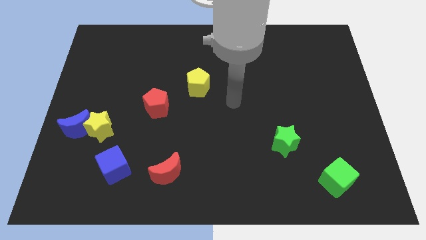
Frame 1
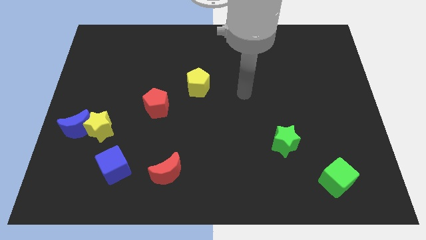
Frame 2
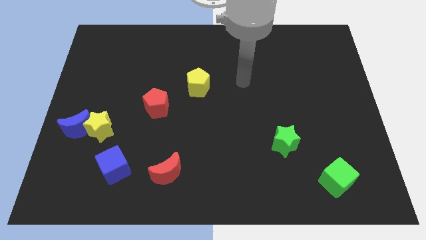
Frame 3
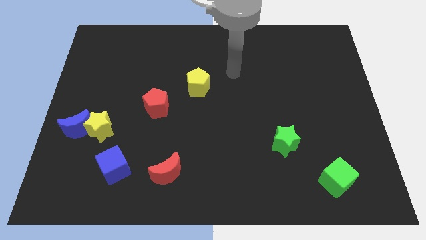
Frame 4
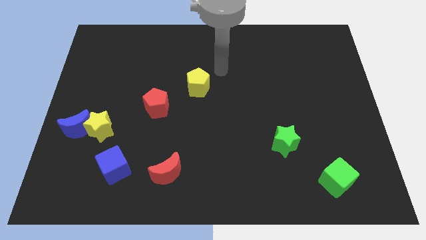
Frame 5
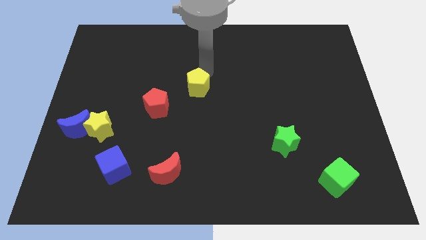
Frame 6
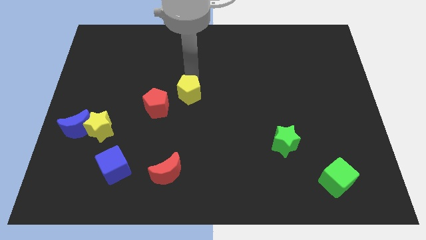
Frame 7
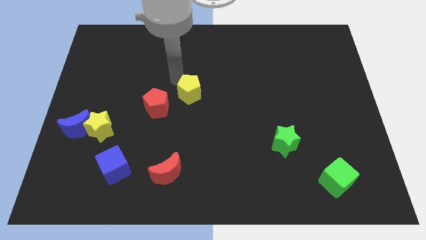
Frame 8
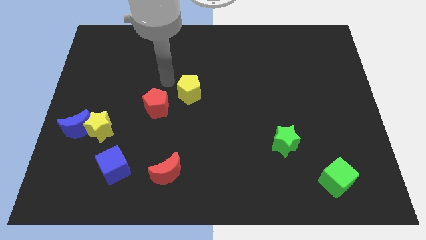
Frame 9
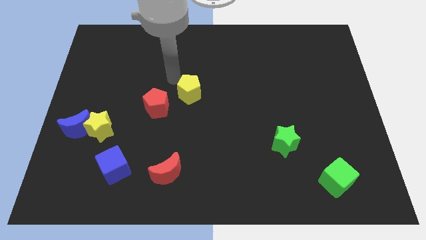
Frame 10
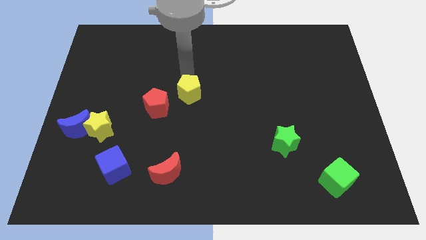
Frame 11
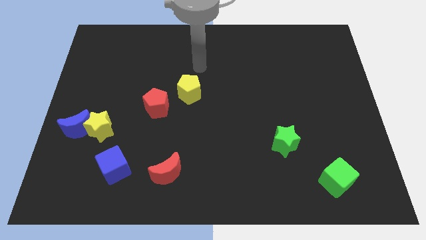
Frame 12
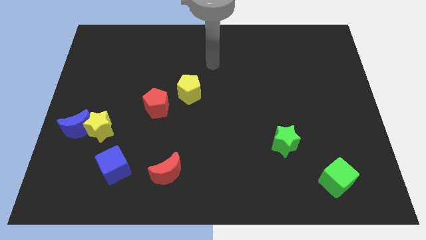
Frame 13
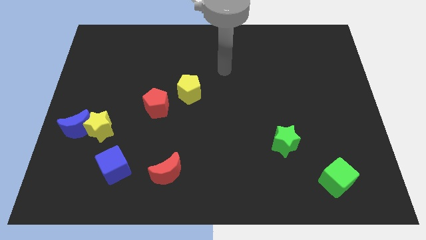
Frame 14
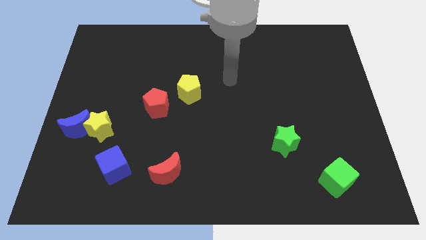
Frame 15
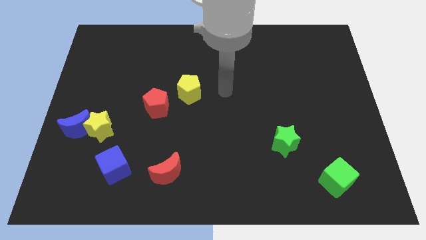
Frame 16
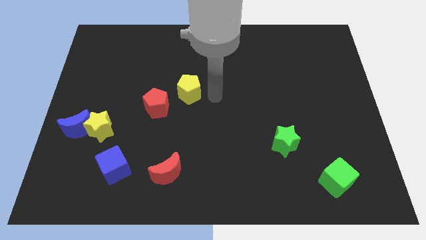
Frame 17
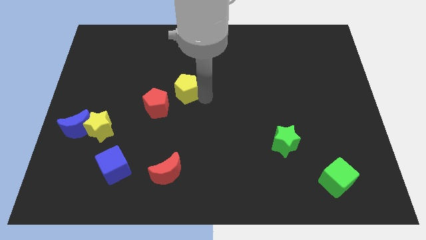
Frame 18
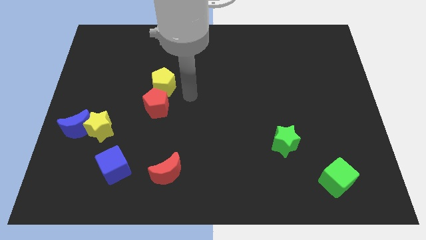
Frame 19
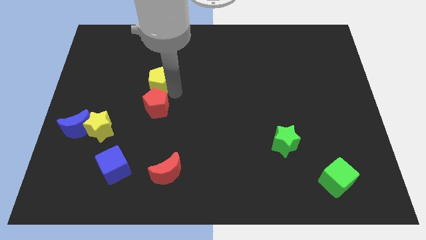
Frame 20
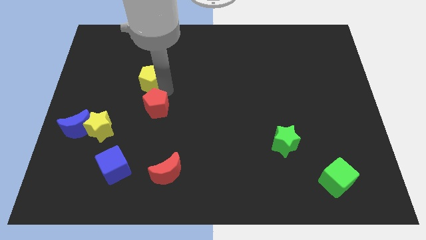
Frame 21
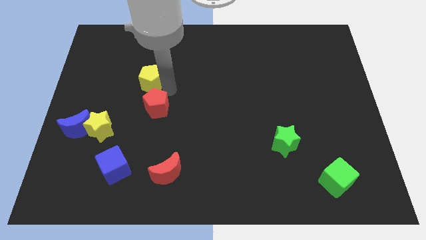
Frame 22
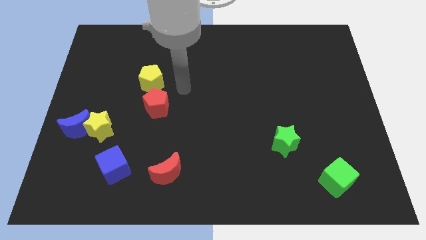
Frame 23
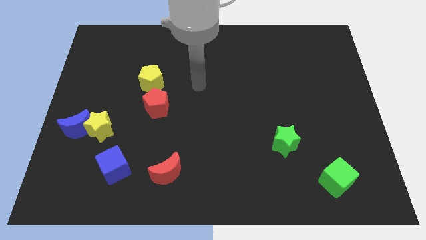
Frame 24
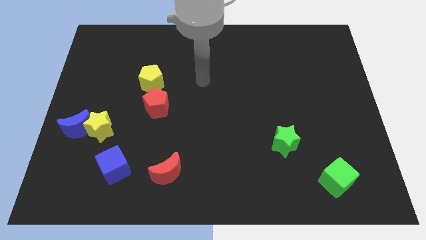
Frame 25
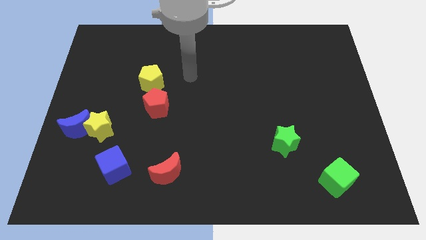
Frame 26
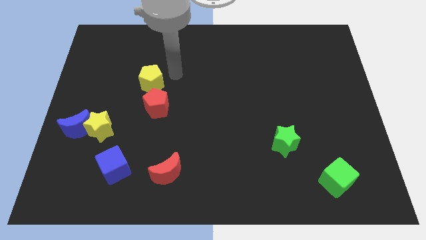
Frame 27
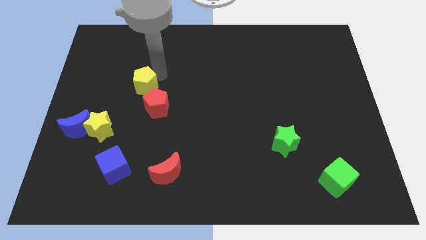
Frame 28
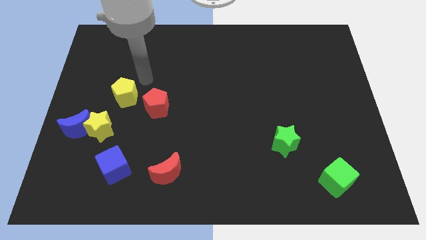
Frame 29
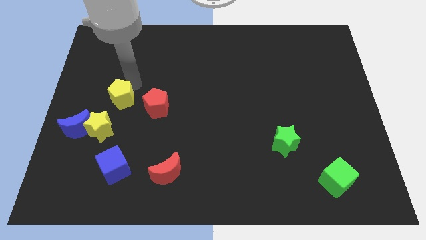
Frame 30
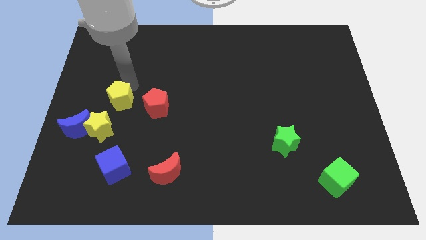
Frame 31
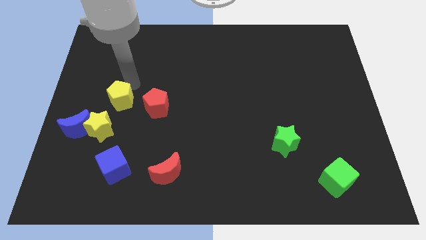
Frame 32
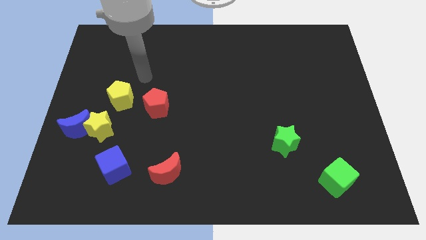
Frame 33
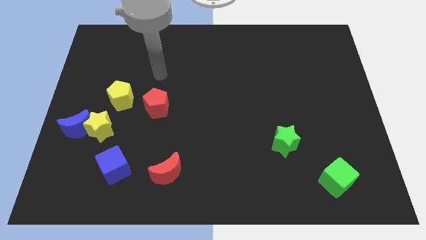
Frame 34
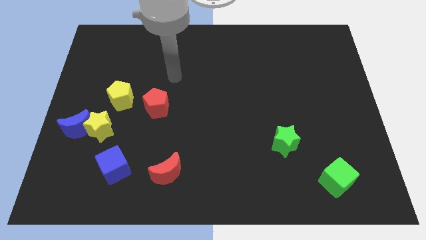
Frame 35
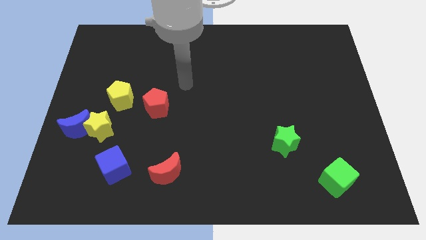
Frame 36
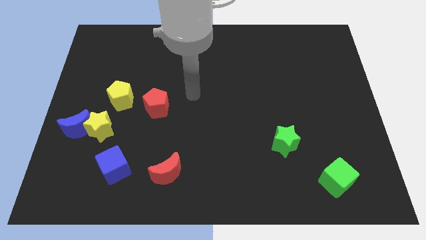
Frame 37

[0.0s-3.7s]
put the yellow pentagon diagonally top left to the red pentagon

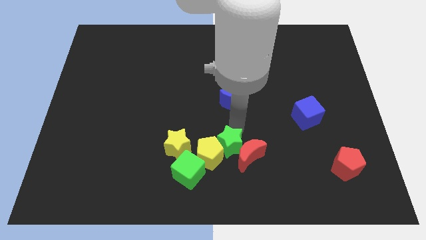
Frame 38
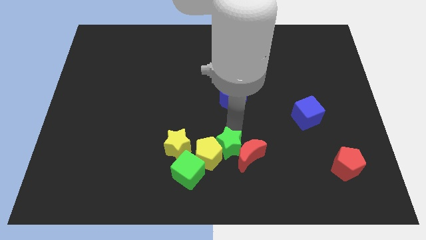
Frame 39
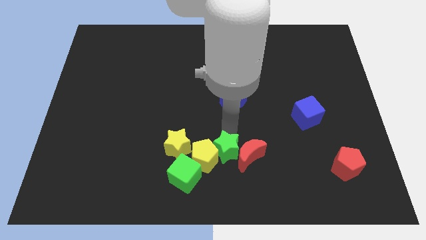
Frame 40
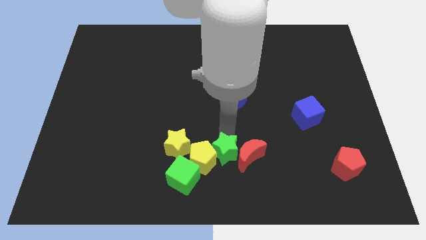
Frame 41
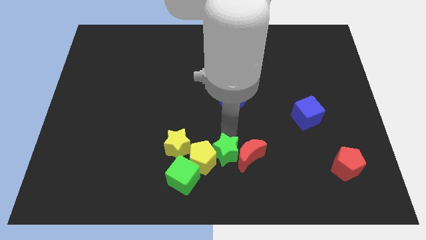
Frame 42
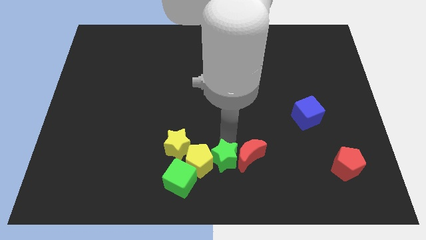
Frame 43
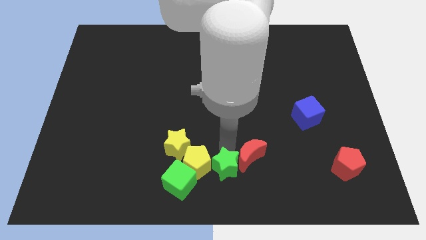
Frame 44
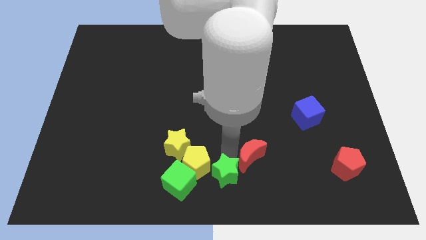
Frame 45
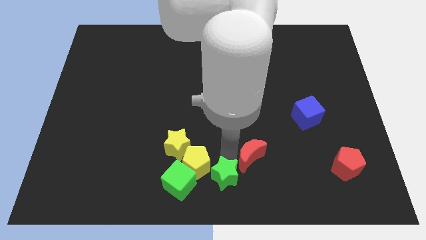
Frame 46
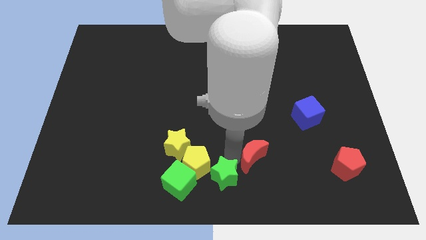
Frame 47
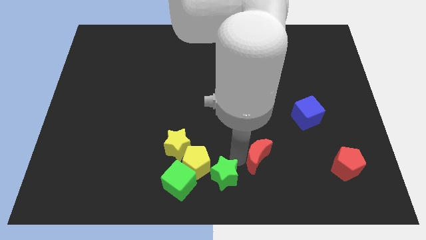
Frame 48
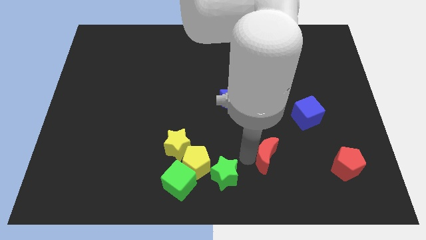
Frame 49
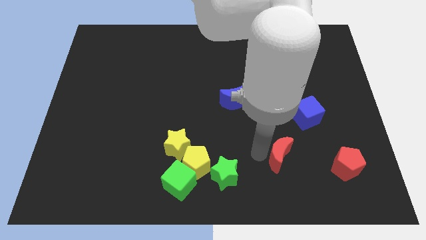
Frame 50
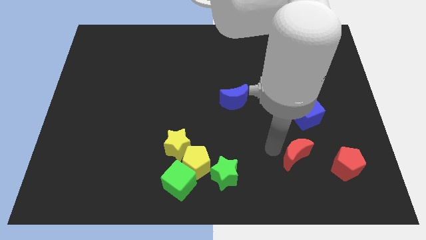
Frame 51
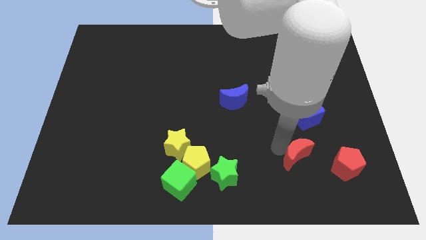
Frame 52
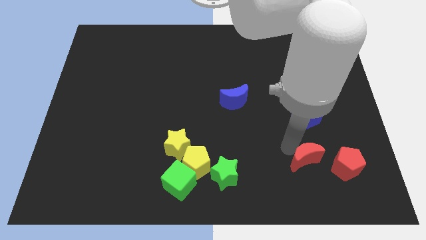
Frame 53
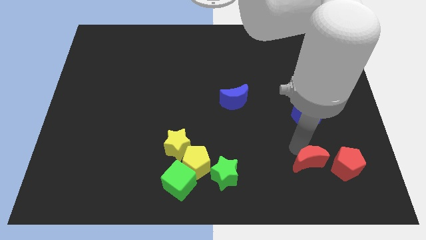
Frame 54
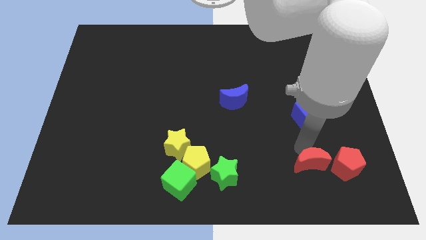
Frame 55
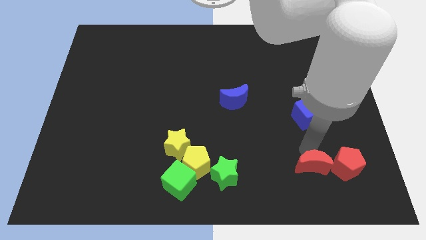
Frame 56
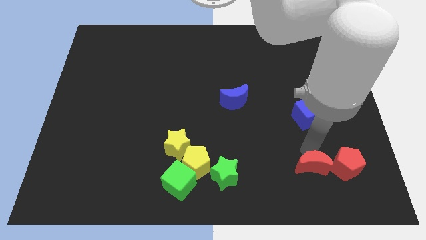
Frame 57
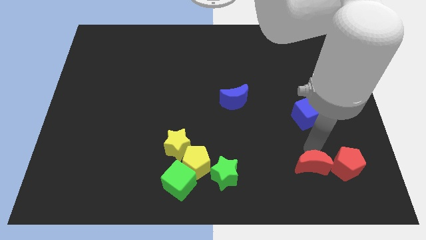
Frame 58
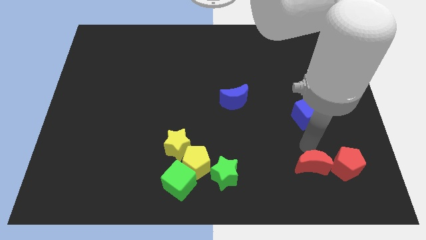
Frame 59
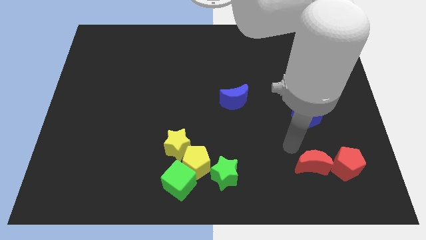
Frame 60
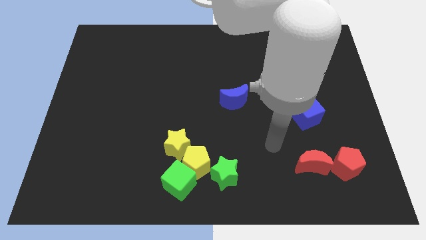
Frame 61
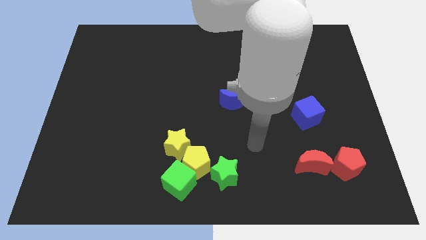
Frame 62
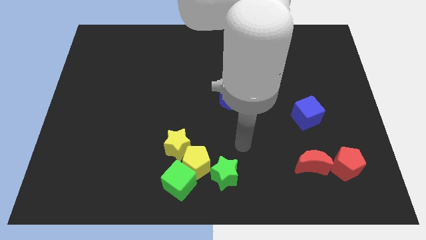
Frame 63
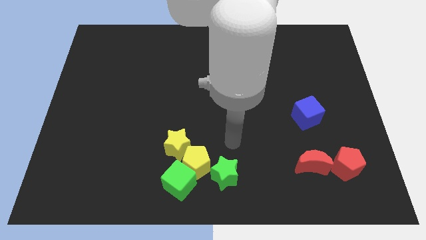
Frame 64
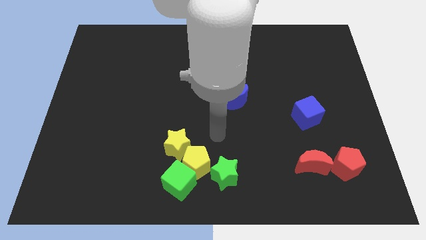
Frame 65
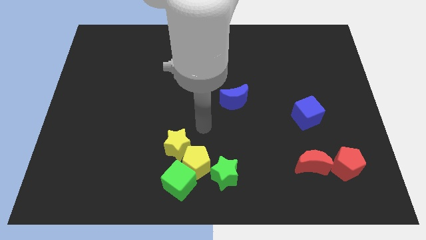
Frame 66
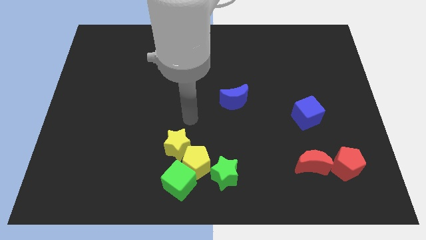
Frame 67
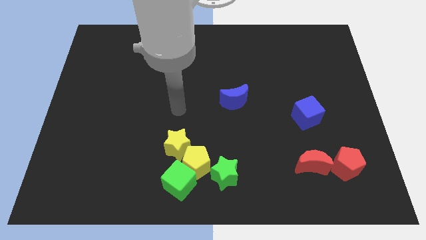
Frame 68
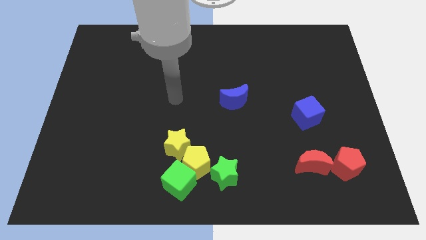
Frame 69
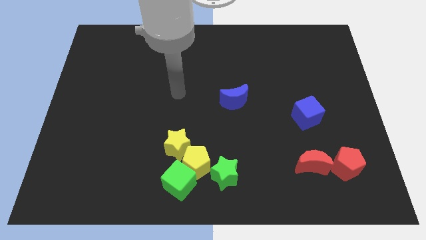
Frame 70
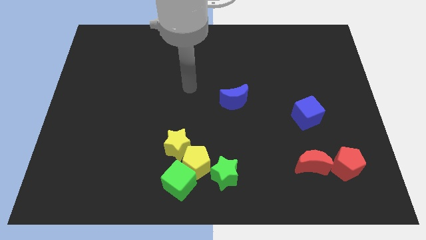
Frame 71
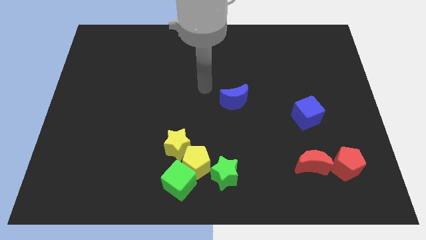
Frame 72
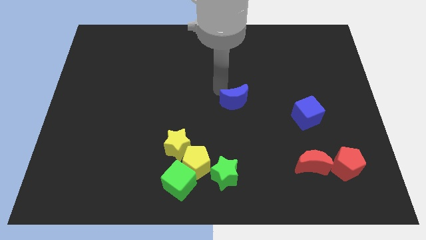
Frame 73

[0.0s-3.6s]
move the red crescent to the left of the red pentagon

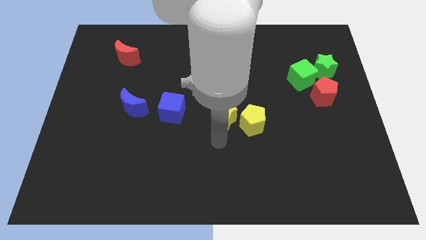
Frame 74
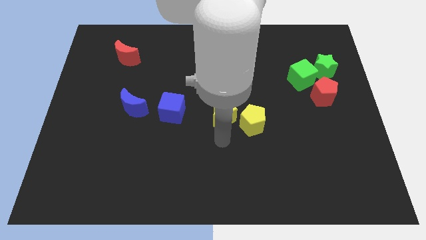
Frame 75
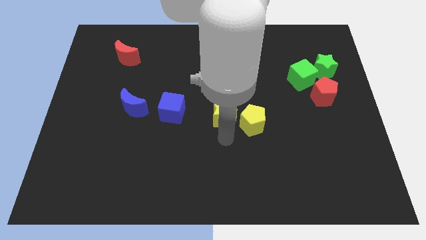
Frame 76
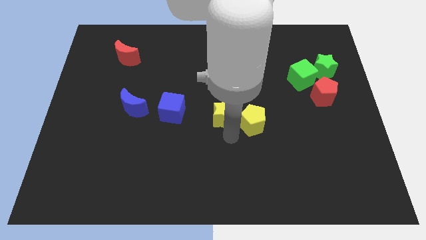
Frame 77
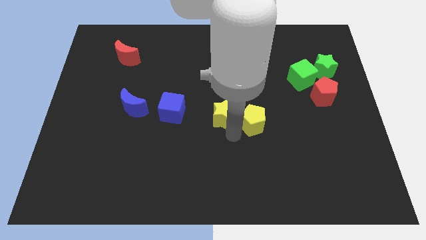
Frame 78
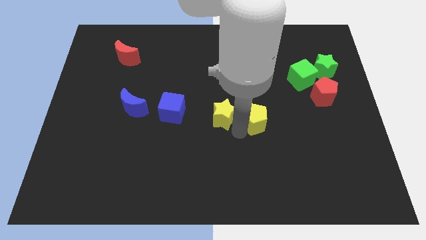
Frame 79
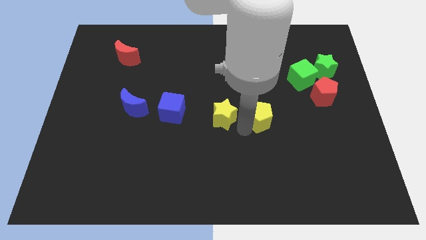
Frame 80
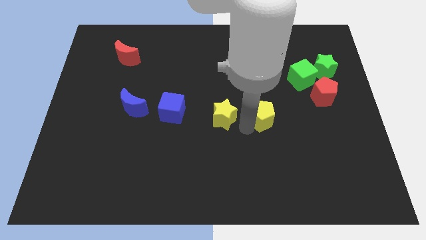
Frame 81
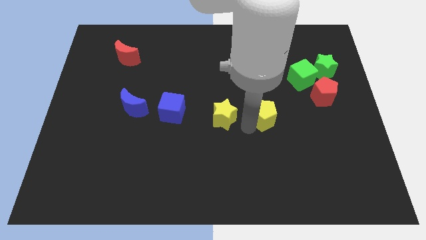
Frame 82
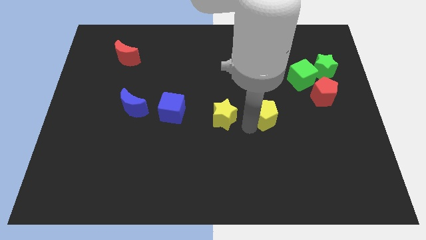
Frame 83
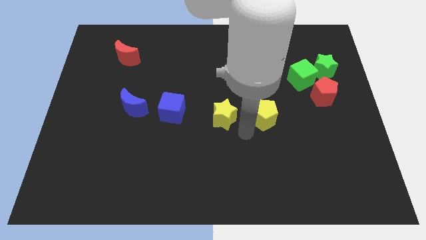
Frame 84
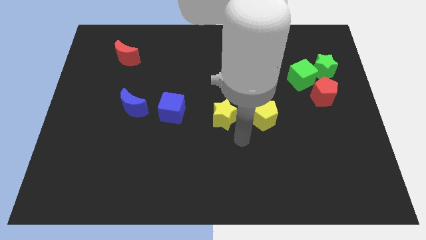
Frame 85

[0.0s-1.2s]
place the yellow pentagon to the right side of yellow star

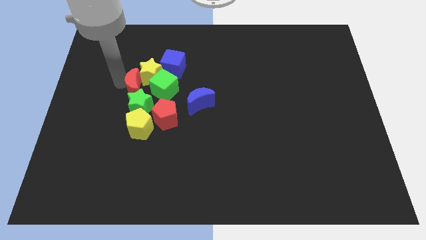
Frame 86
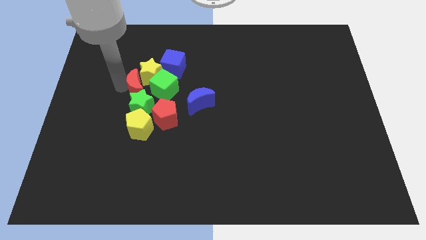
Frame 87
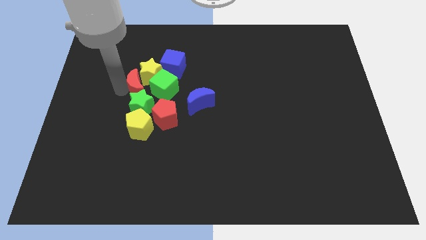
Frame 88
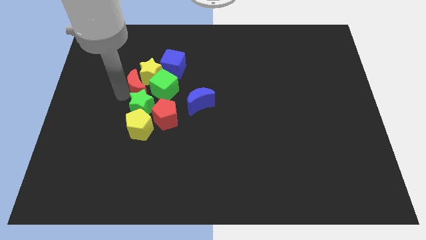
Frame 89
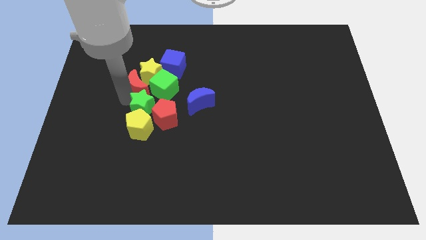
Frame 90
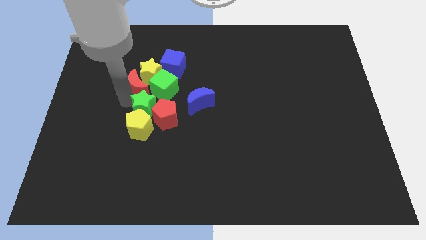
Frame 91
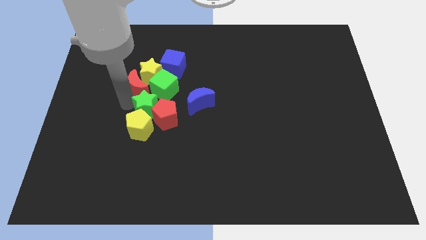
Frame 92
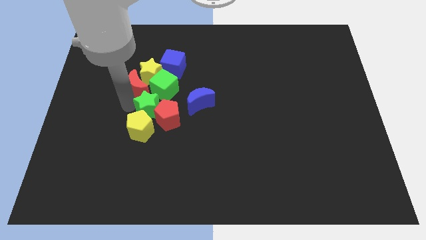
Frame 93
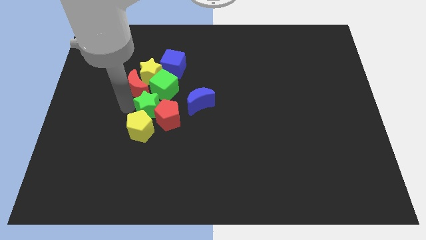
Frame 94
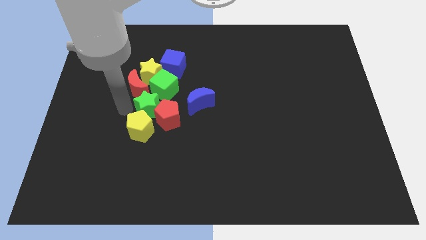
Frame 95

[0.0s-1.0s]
slightly push the green star on the board
